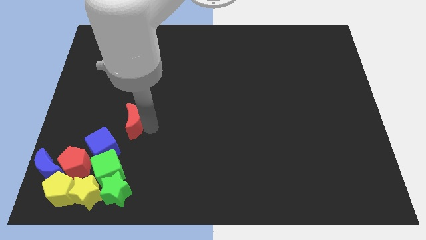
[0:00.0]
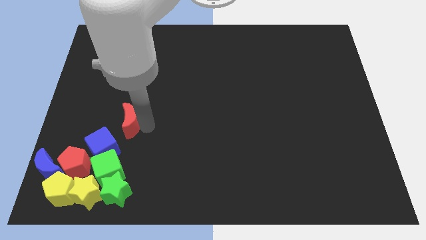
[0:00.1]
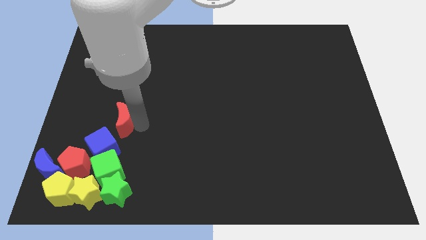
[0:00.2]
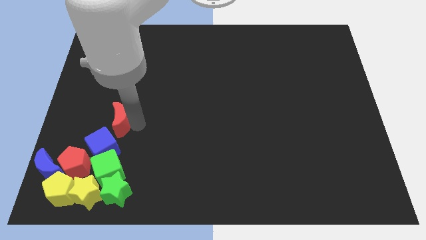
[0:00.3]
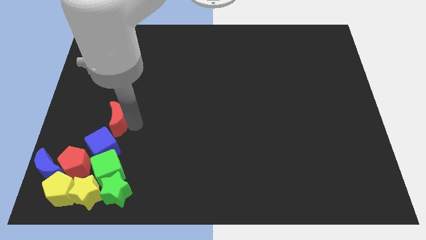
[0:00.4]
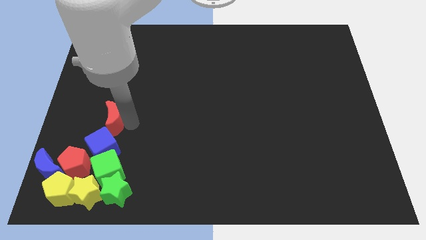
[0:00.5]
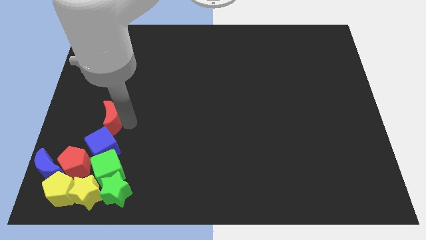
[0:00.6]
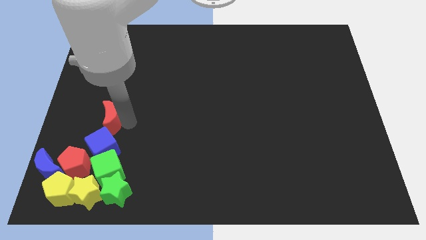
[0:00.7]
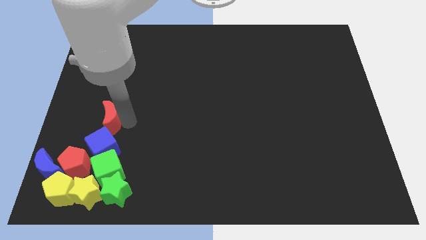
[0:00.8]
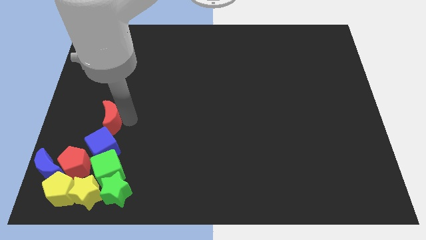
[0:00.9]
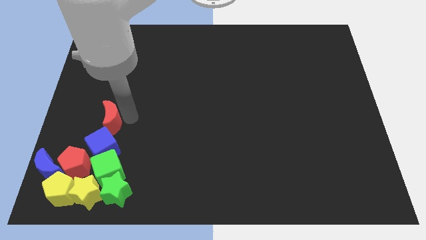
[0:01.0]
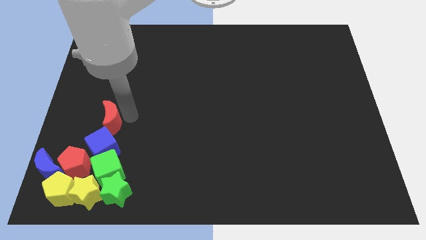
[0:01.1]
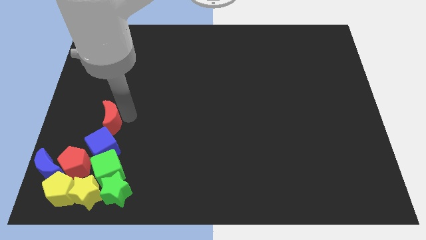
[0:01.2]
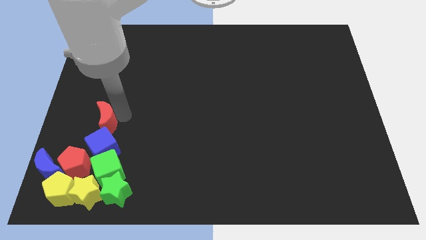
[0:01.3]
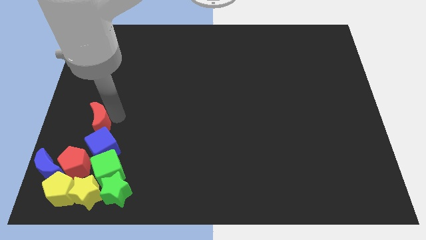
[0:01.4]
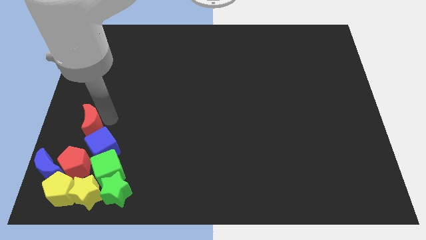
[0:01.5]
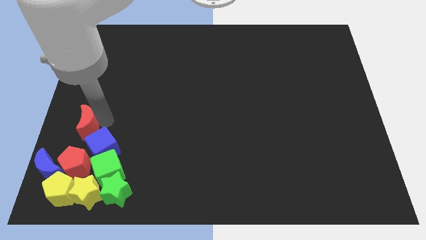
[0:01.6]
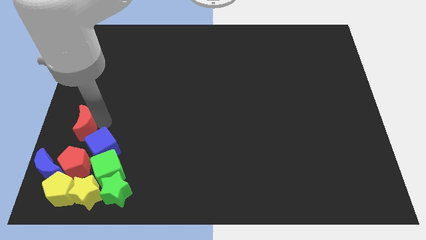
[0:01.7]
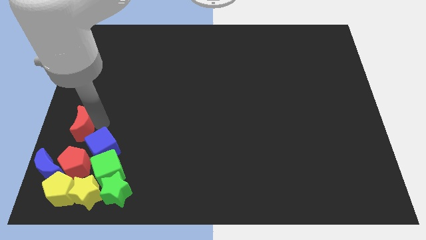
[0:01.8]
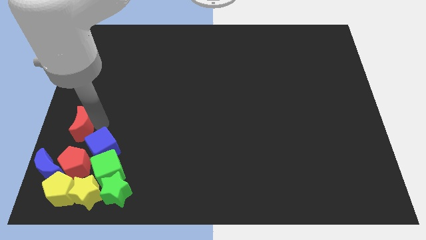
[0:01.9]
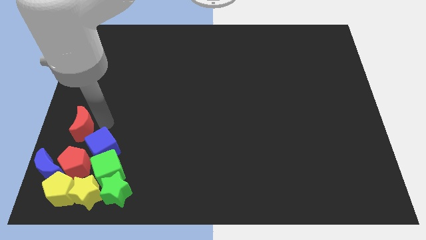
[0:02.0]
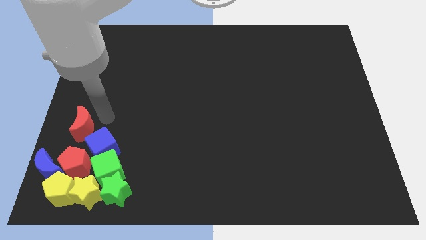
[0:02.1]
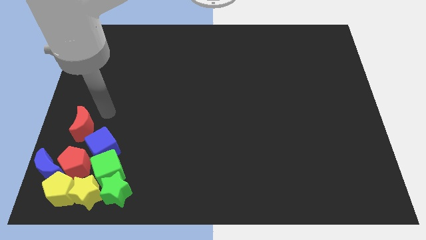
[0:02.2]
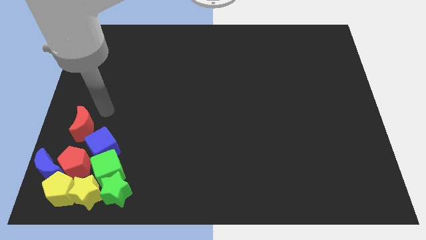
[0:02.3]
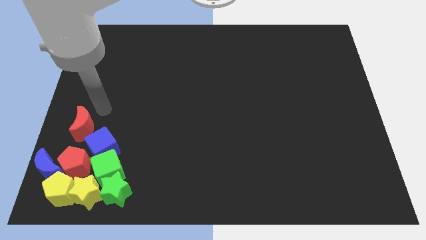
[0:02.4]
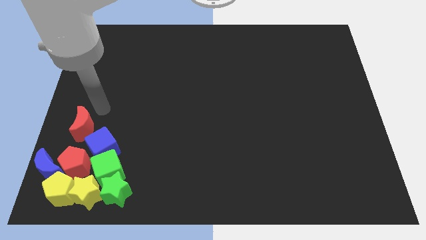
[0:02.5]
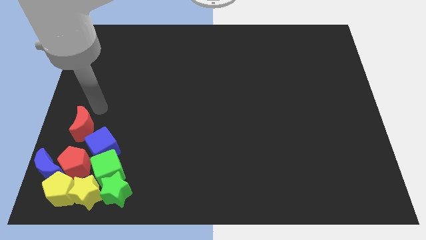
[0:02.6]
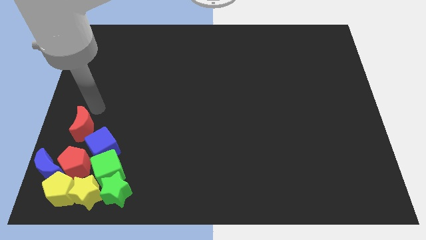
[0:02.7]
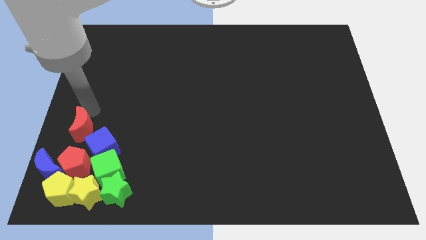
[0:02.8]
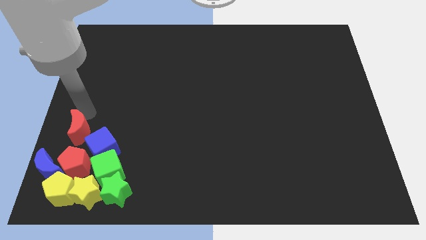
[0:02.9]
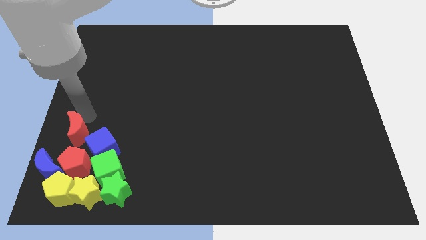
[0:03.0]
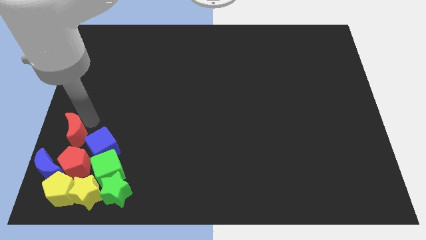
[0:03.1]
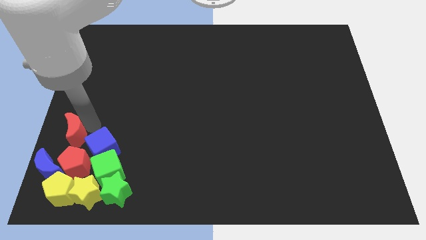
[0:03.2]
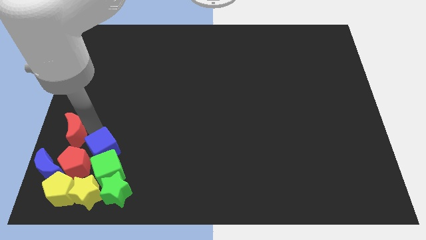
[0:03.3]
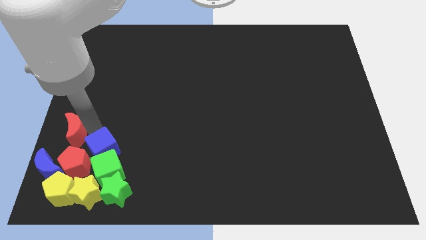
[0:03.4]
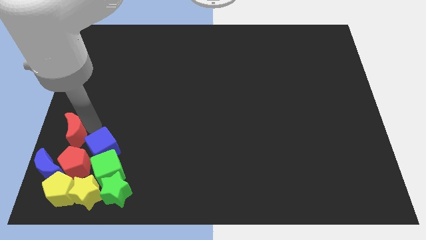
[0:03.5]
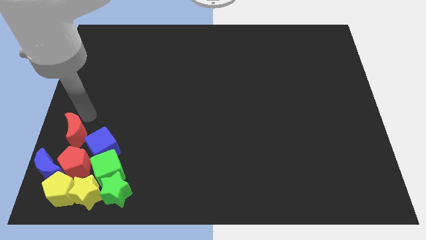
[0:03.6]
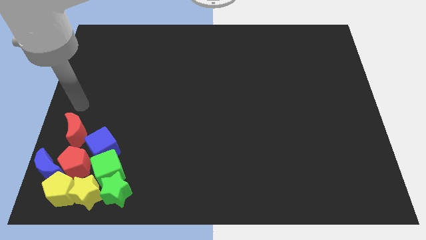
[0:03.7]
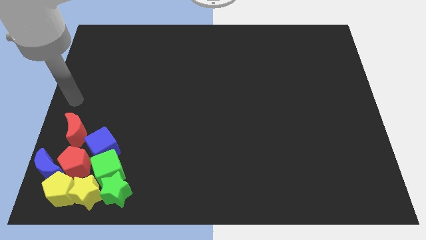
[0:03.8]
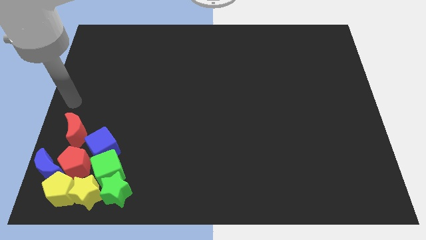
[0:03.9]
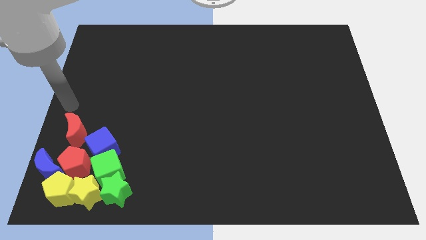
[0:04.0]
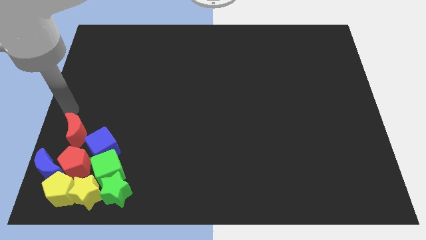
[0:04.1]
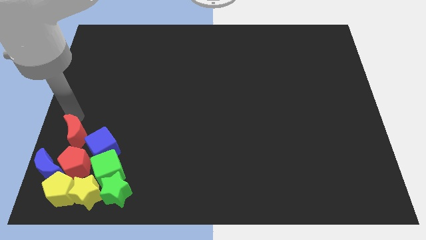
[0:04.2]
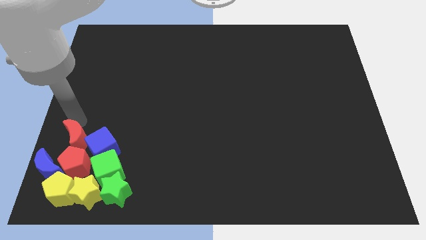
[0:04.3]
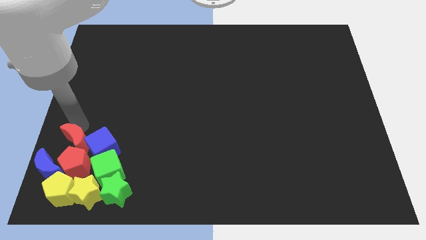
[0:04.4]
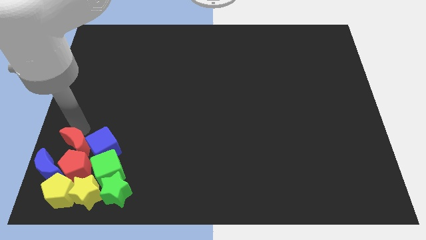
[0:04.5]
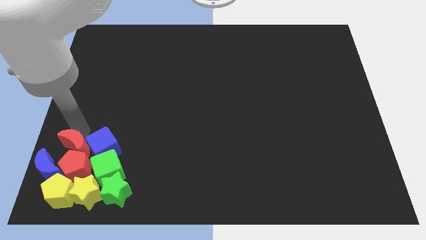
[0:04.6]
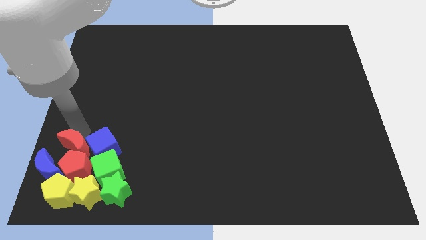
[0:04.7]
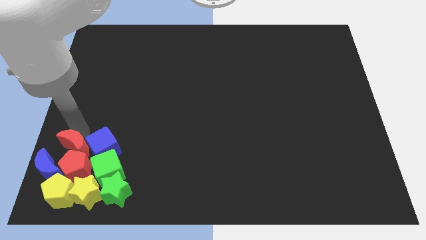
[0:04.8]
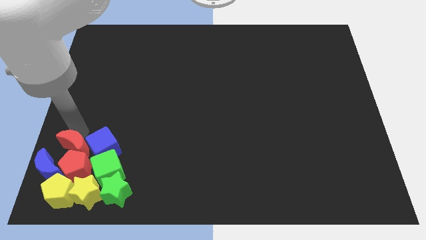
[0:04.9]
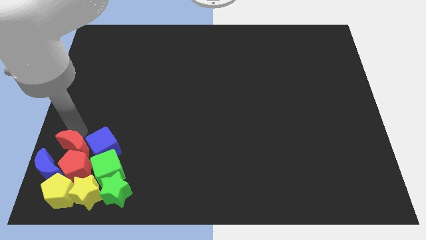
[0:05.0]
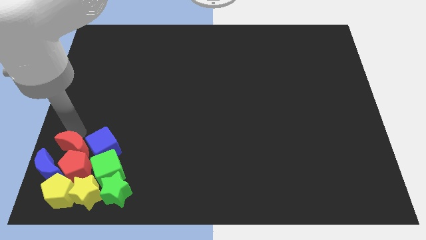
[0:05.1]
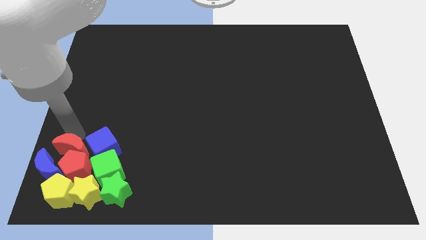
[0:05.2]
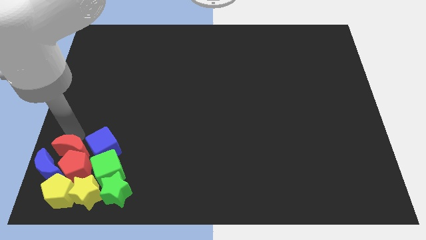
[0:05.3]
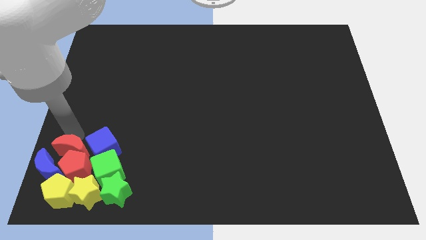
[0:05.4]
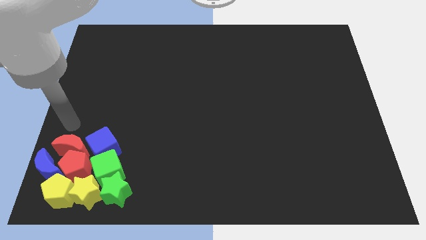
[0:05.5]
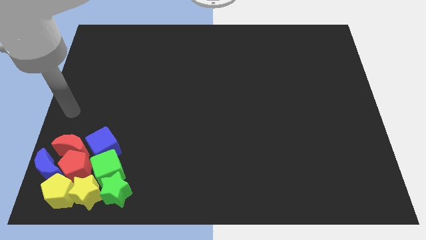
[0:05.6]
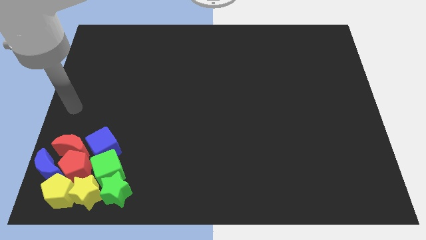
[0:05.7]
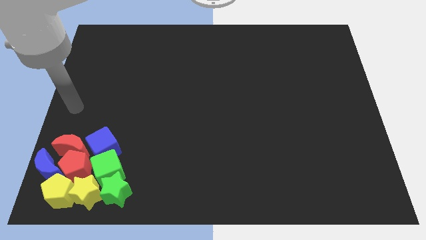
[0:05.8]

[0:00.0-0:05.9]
move the red crescent to the left of the blue cube

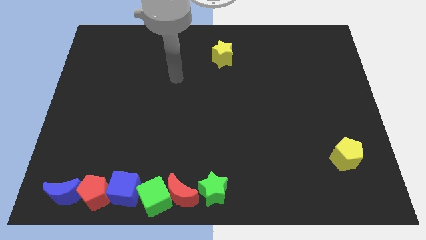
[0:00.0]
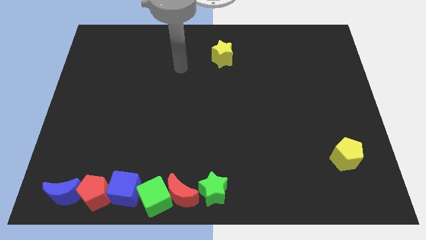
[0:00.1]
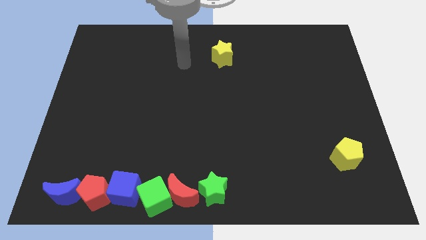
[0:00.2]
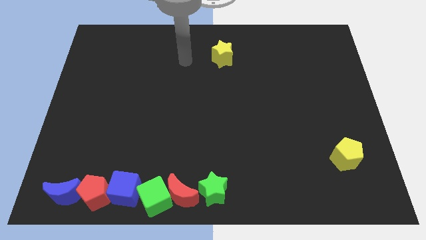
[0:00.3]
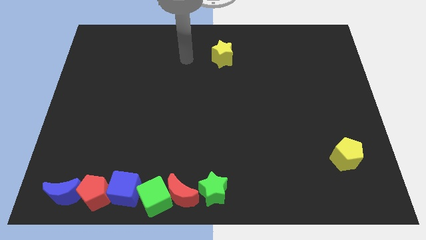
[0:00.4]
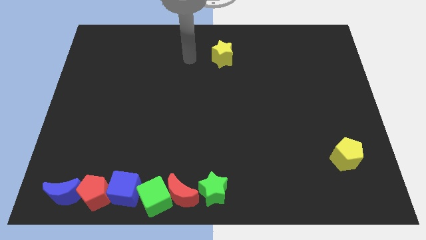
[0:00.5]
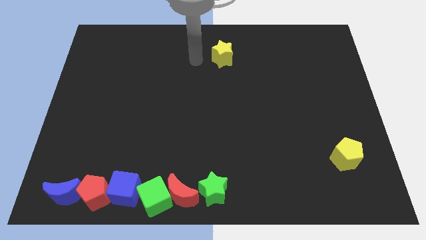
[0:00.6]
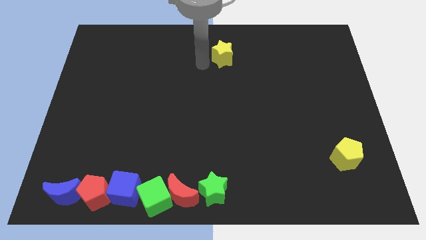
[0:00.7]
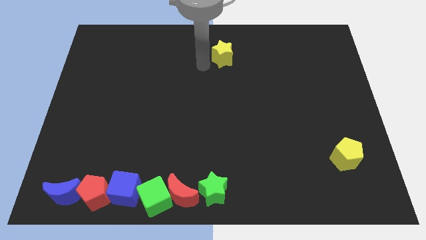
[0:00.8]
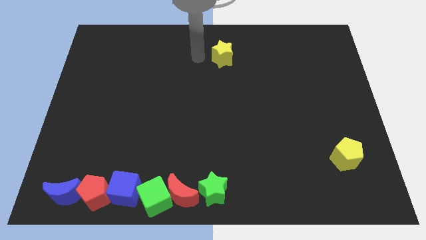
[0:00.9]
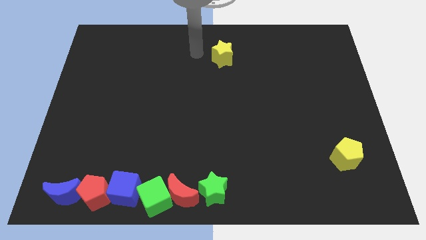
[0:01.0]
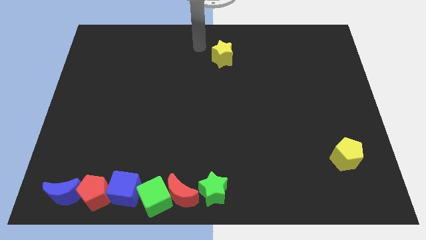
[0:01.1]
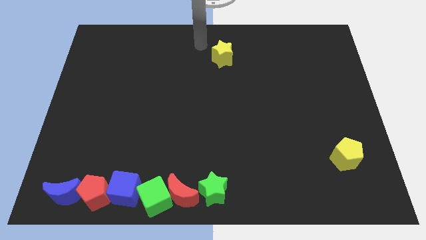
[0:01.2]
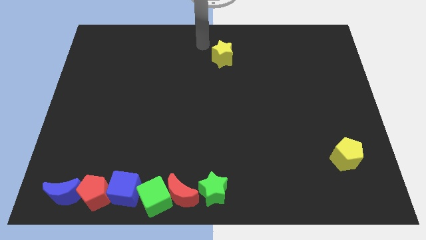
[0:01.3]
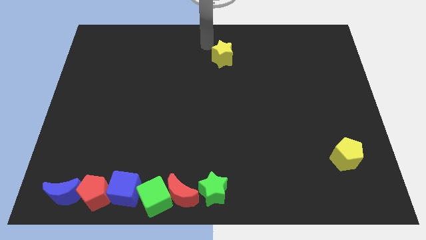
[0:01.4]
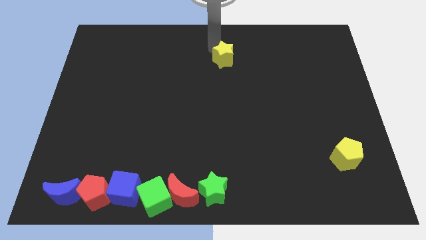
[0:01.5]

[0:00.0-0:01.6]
point your arm to the top left of the yellow star

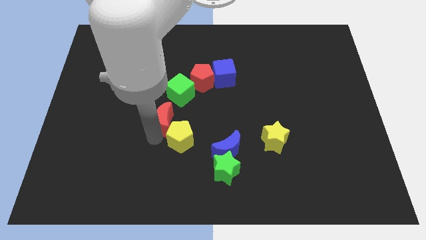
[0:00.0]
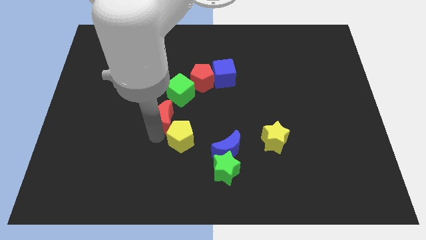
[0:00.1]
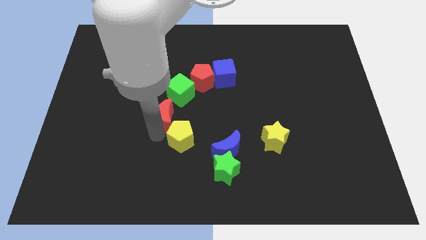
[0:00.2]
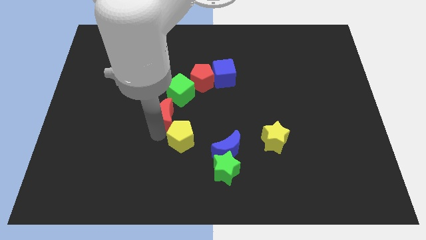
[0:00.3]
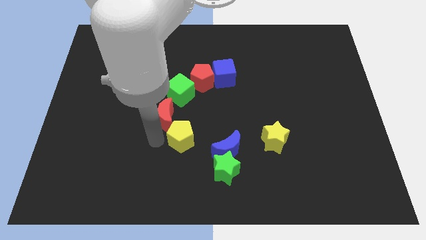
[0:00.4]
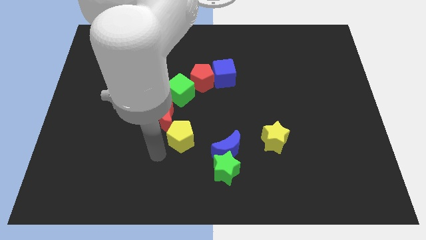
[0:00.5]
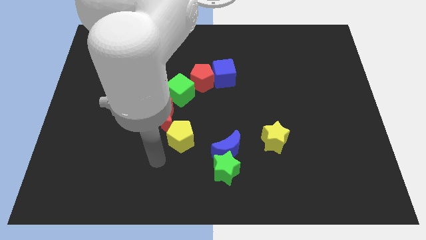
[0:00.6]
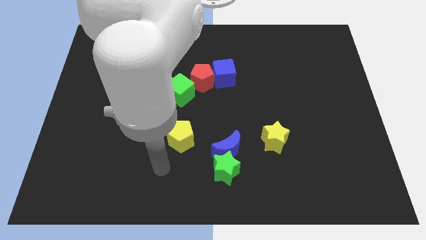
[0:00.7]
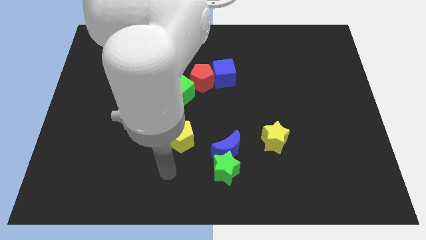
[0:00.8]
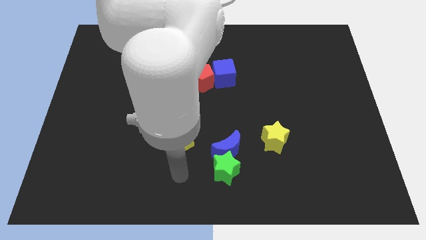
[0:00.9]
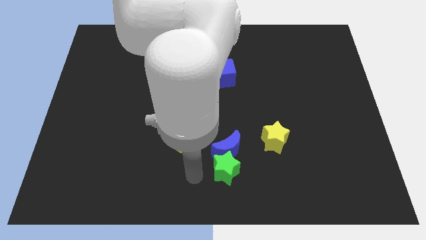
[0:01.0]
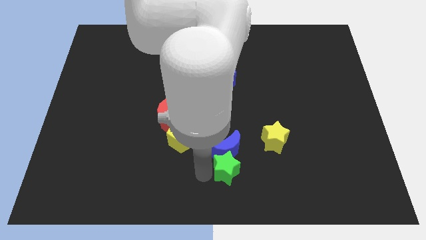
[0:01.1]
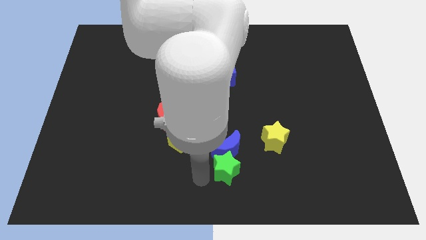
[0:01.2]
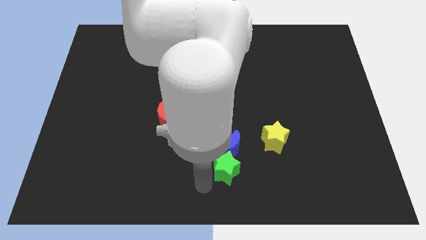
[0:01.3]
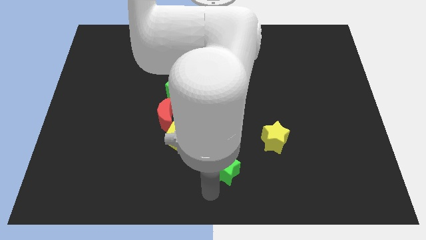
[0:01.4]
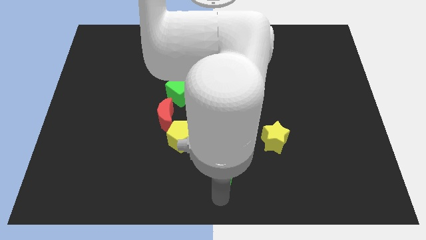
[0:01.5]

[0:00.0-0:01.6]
move the arm away from the yellow pentagon
